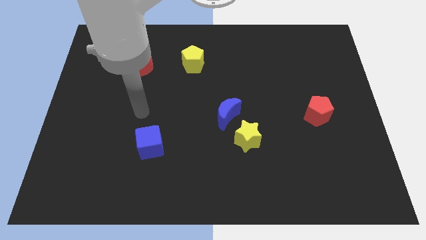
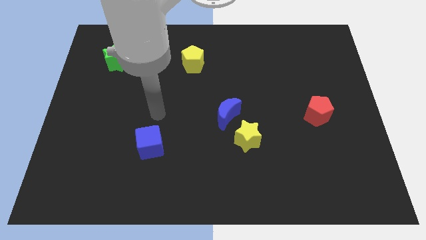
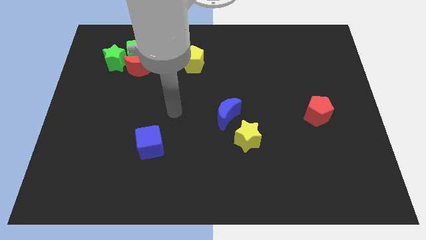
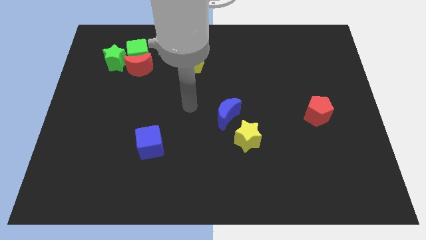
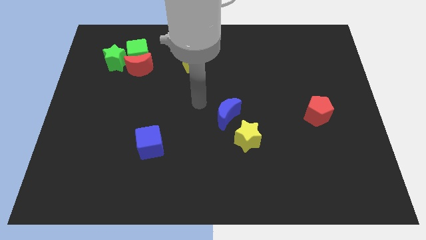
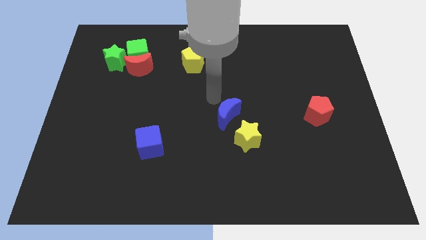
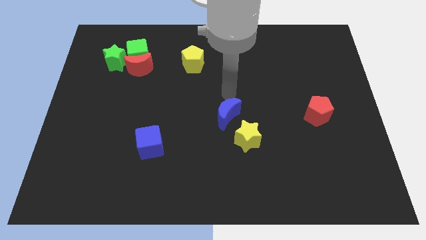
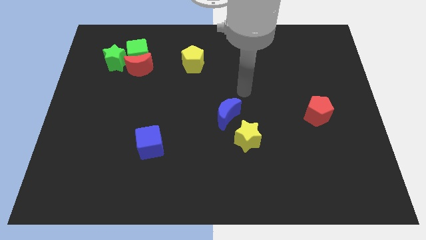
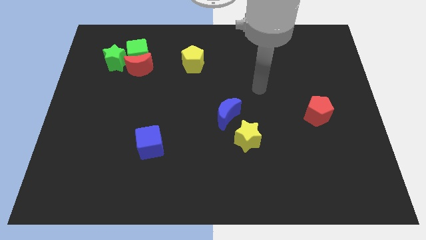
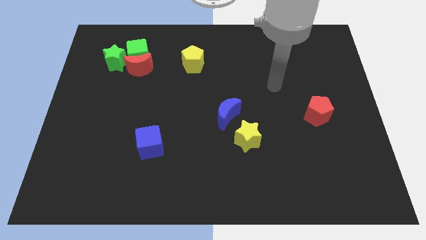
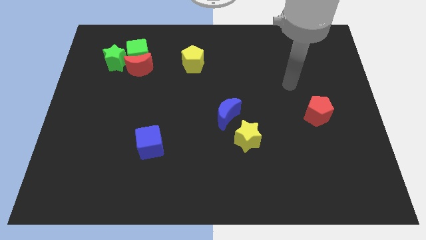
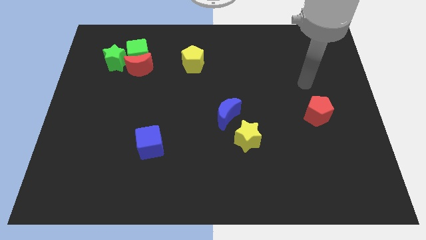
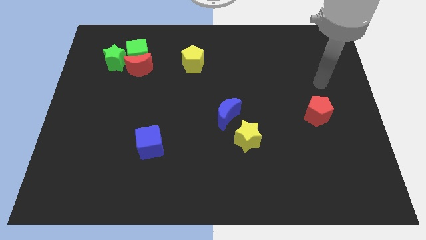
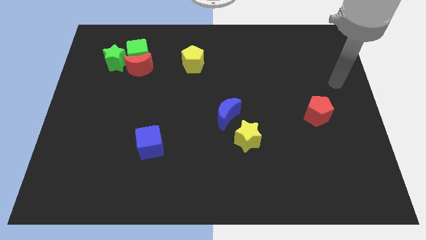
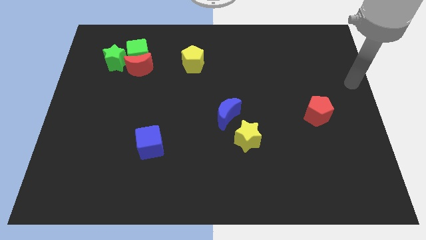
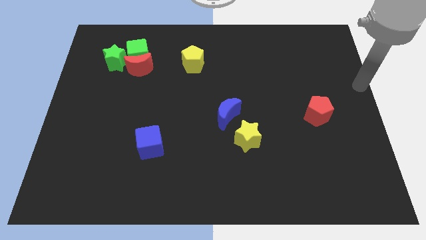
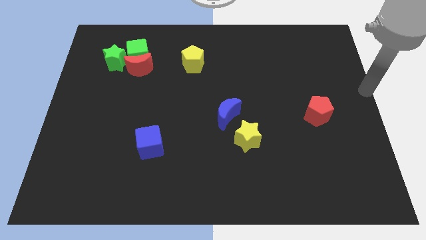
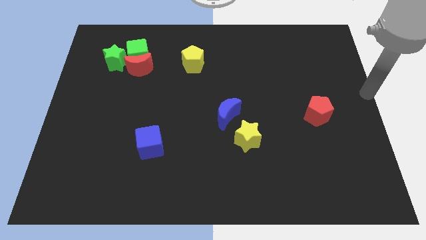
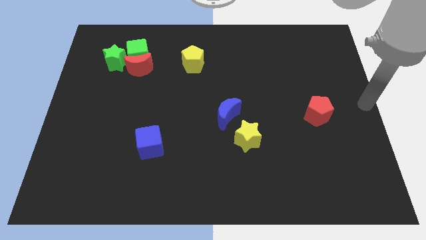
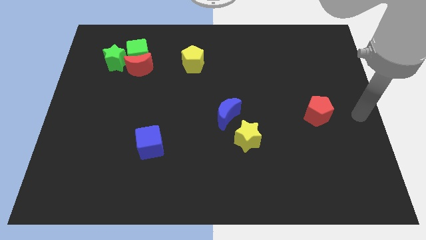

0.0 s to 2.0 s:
move your arm to the center right of the board

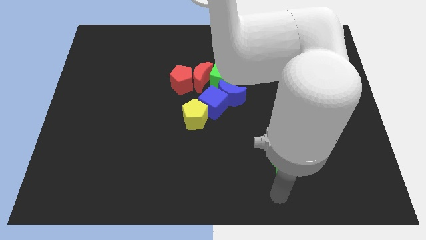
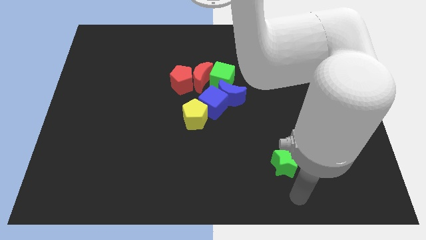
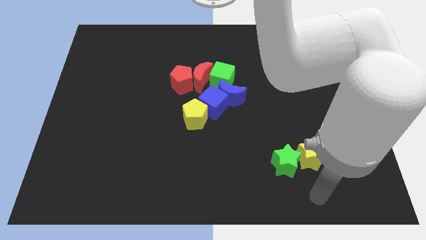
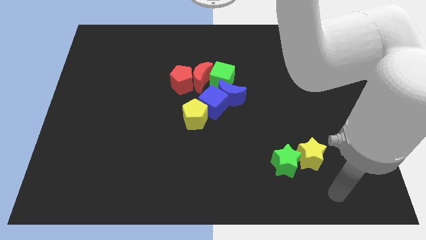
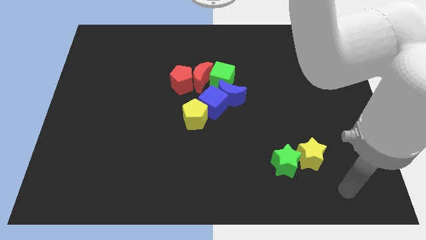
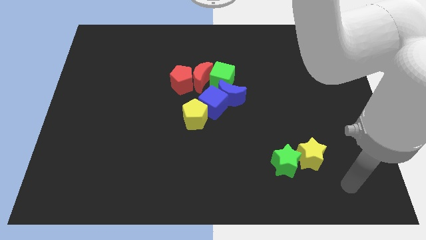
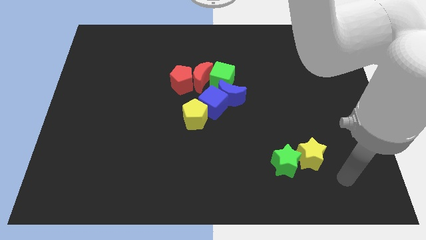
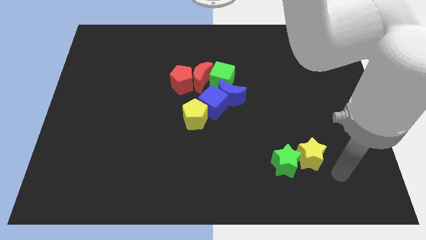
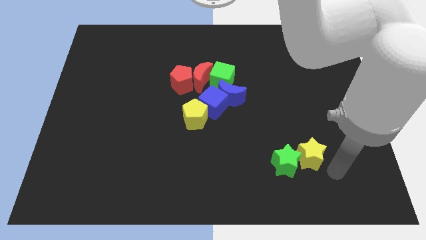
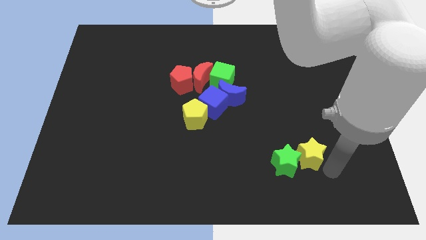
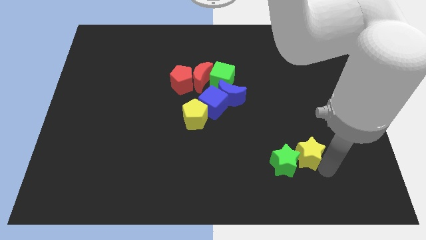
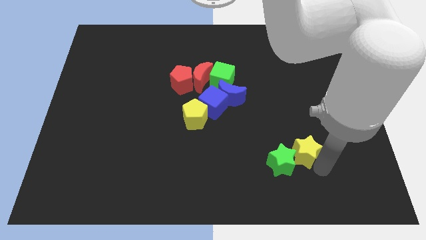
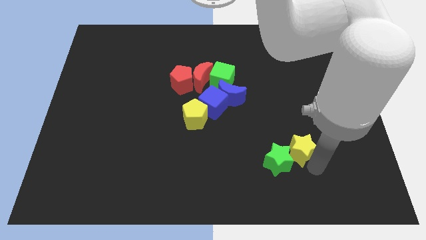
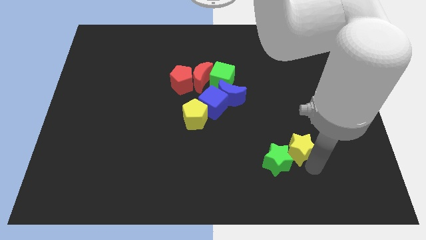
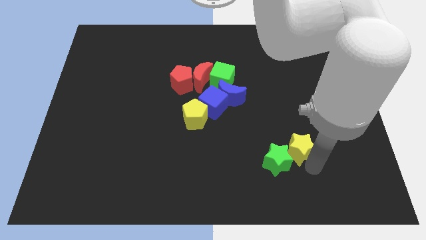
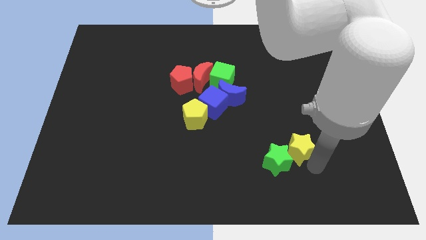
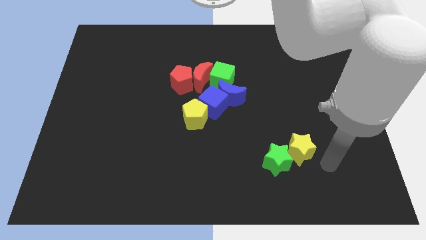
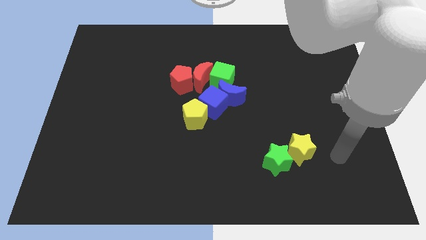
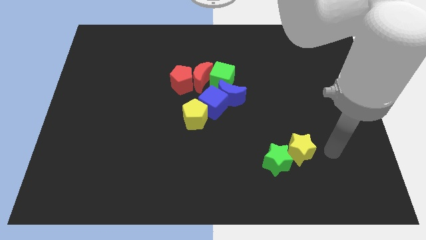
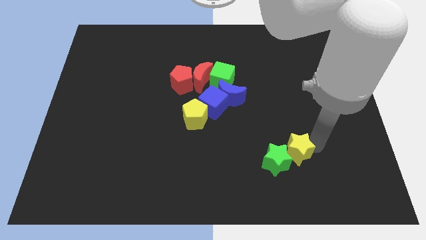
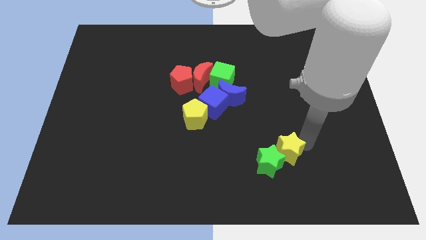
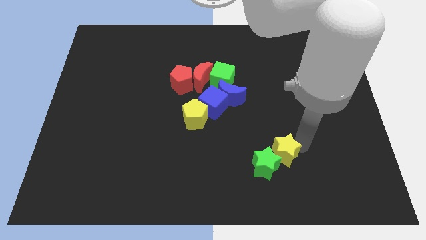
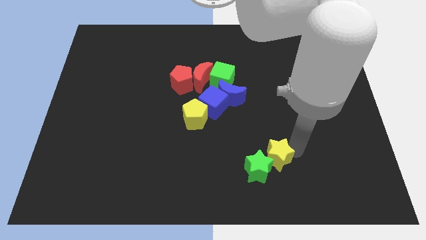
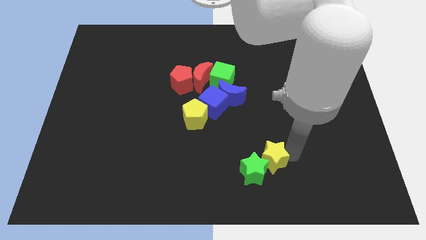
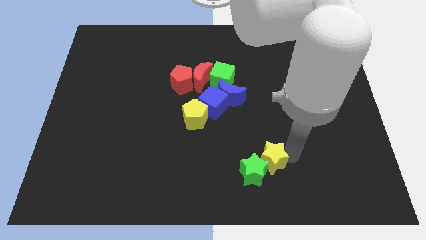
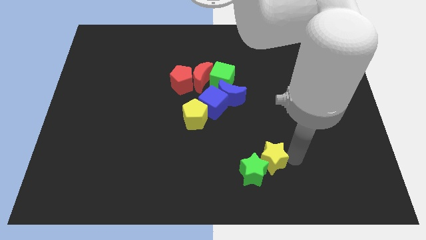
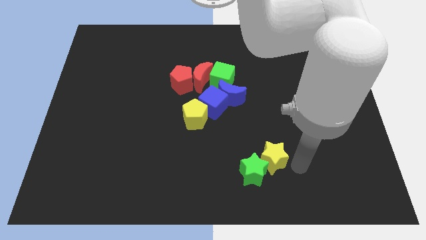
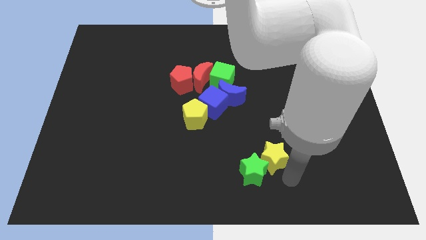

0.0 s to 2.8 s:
move the yellow star along with green star downwards

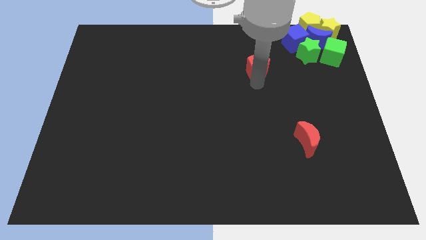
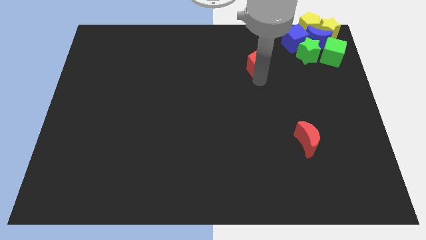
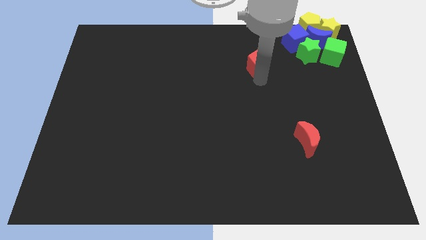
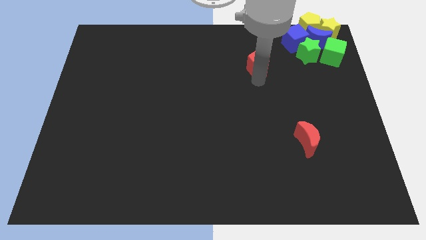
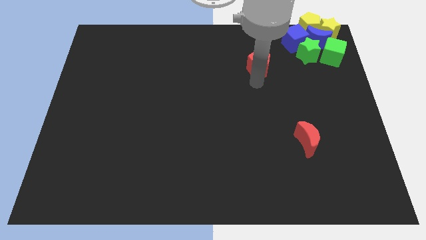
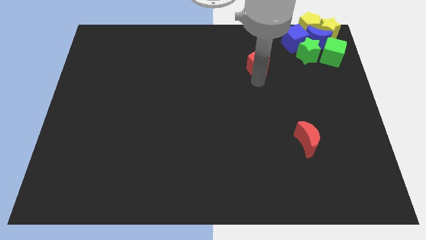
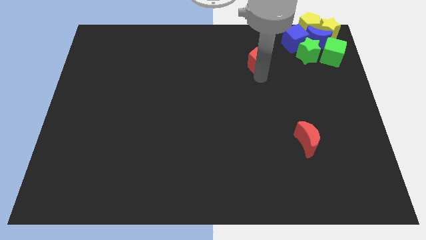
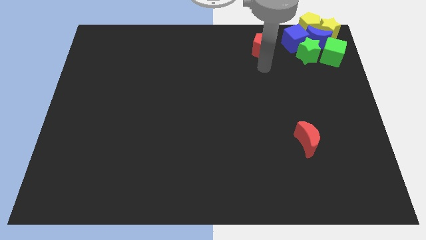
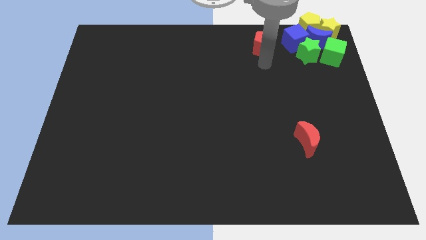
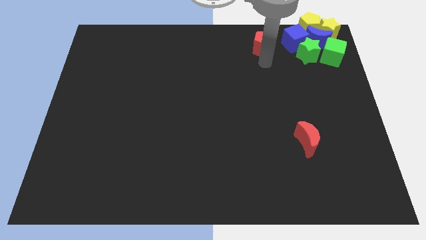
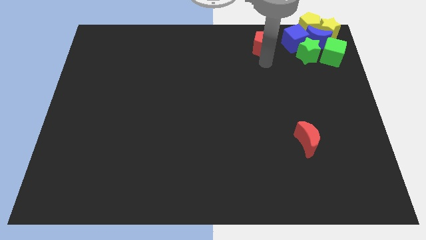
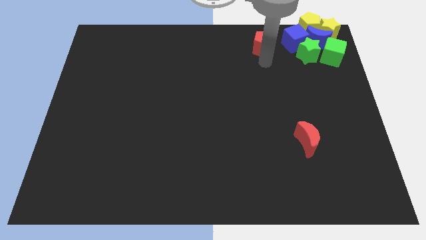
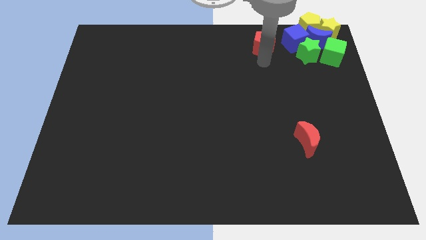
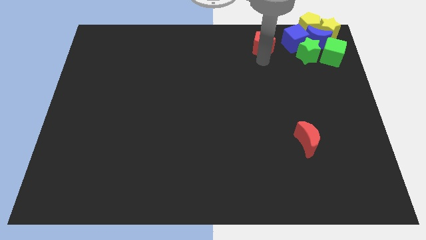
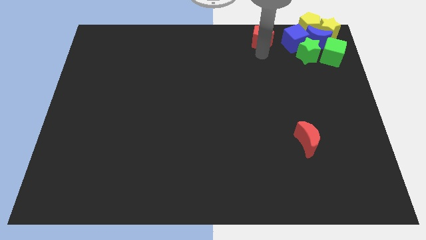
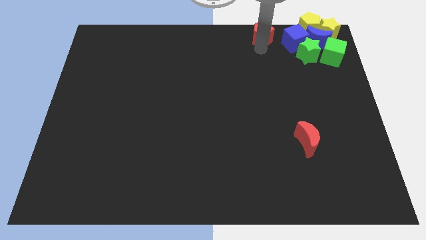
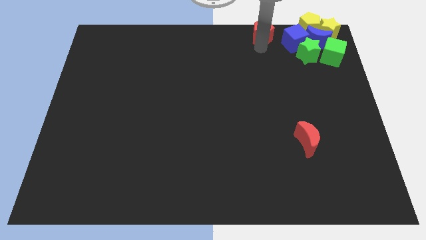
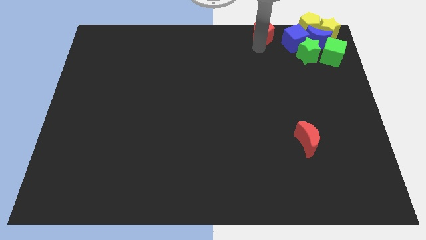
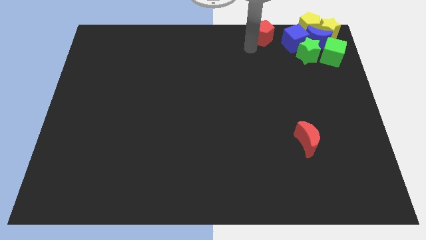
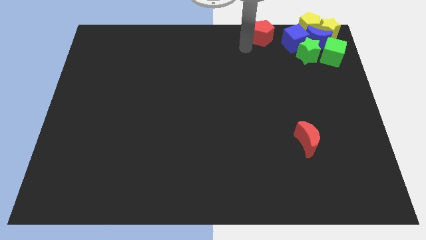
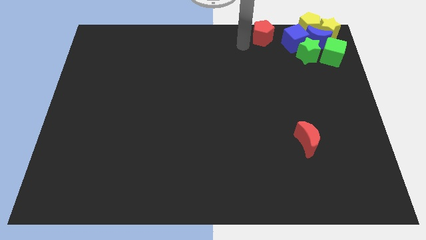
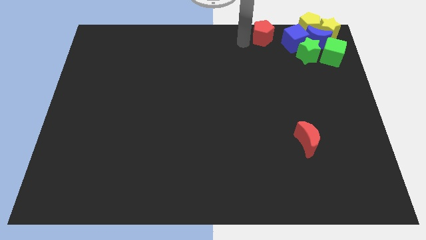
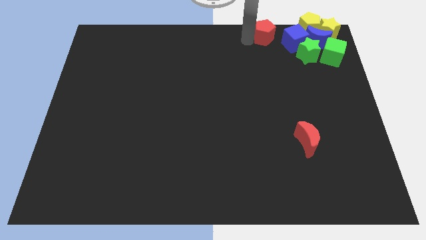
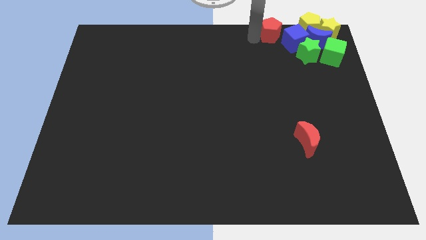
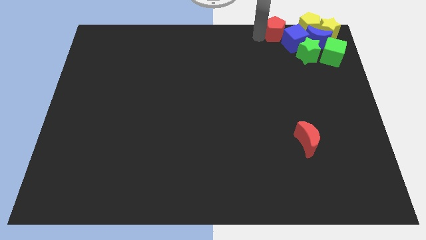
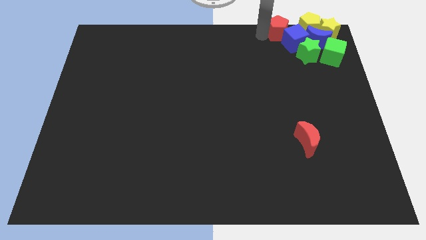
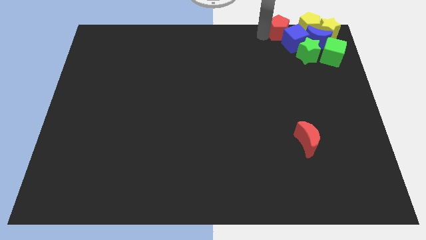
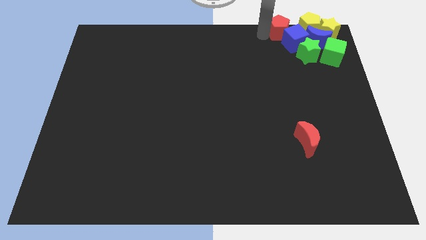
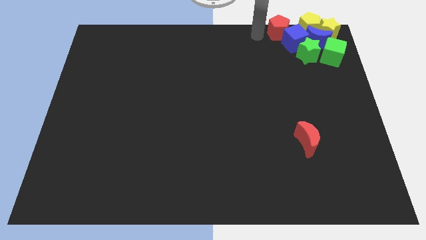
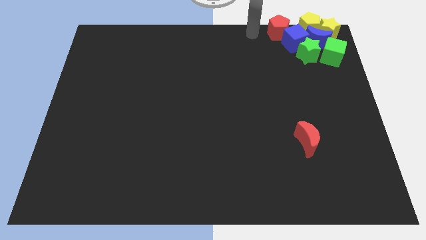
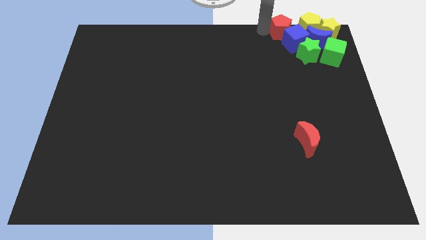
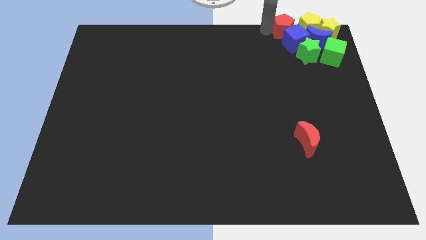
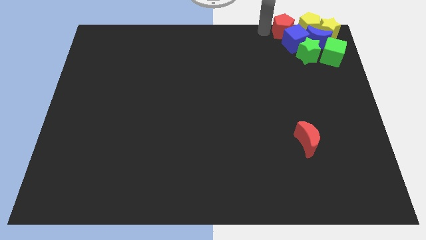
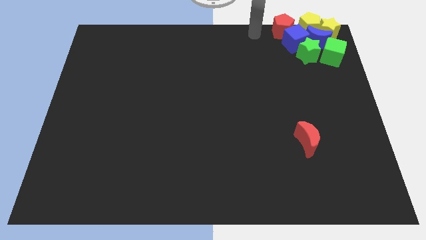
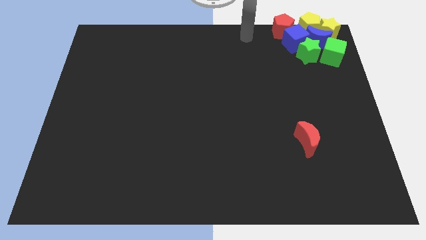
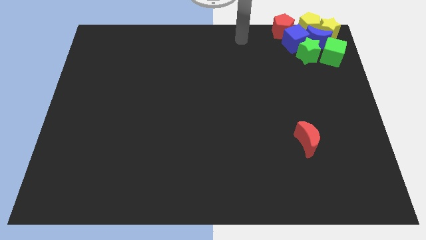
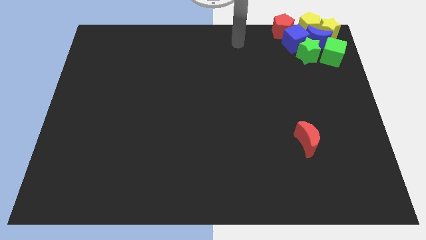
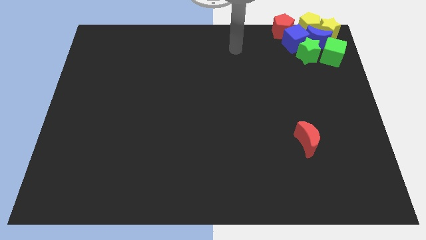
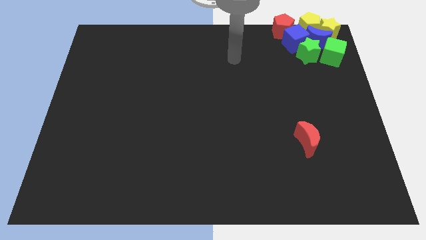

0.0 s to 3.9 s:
move red crescent into group of blocks

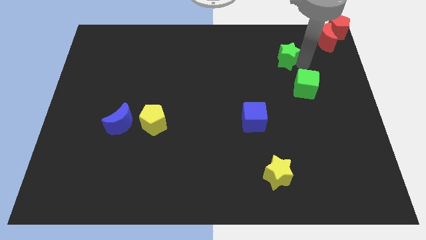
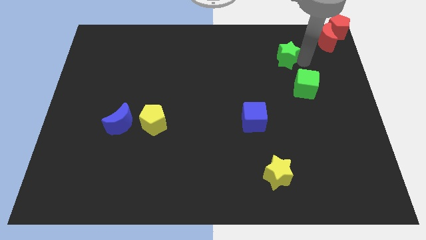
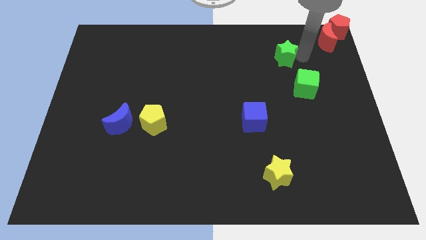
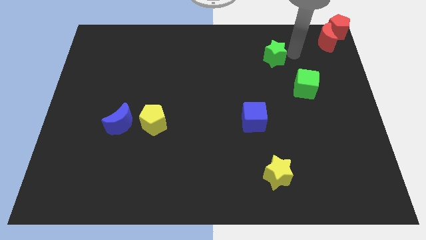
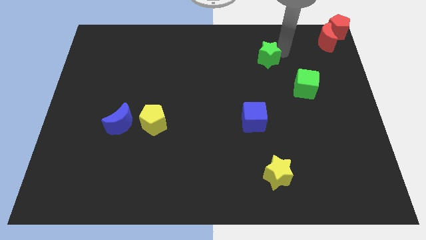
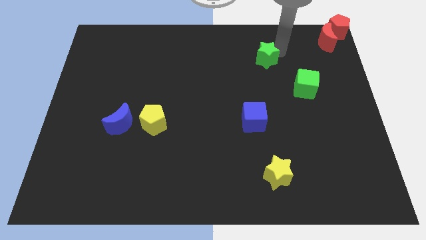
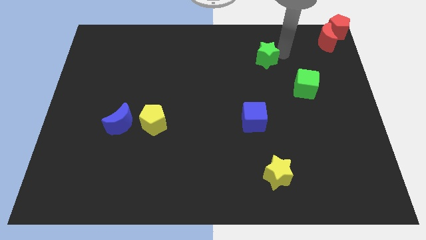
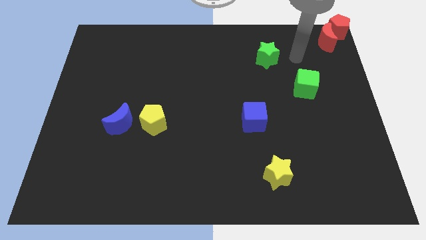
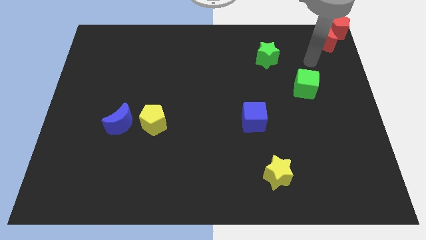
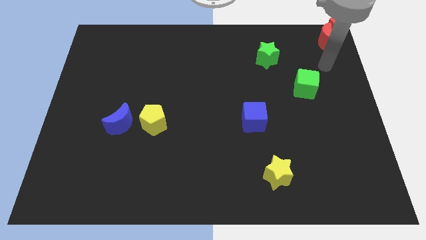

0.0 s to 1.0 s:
push the green star slightly to the left
